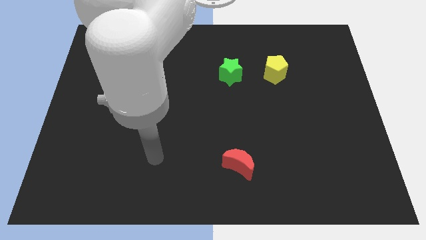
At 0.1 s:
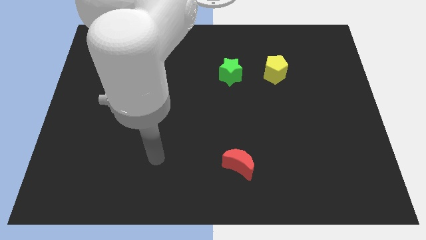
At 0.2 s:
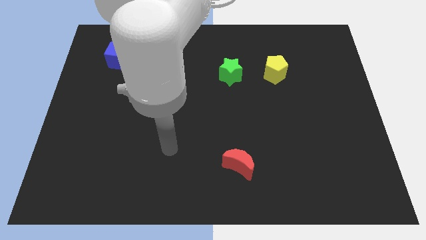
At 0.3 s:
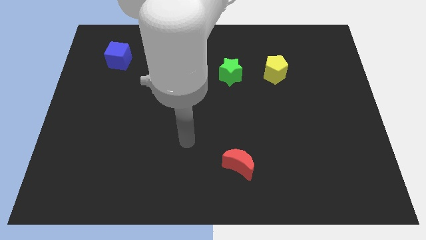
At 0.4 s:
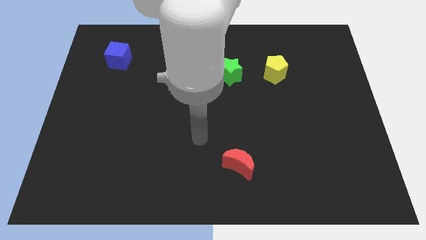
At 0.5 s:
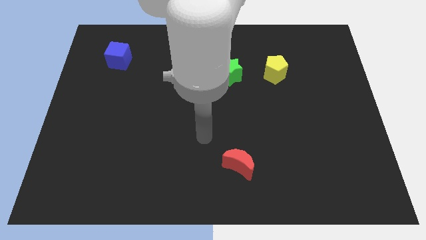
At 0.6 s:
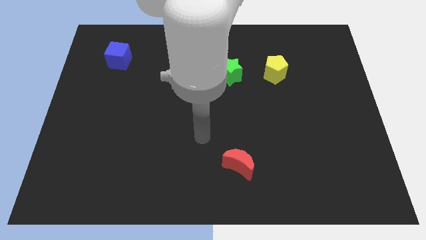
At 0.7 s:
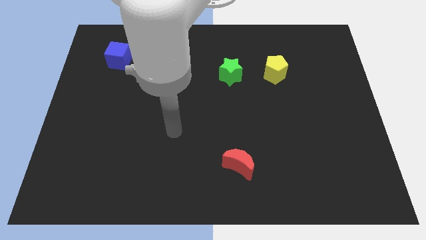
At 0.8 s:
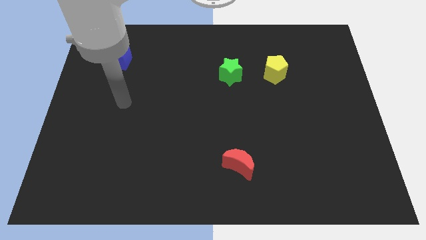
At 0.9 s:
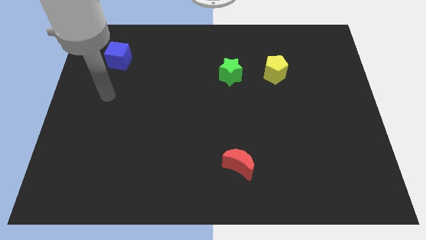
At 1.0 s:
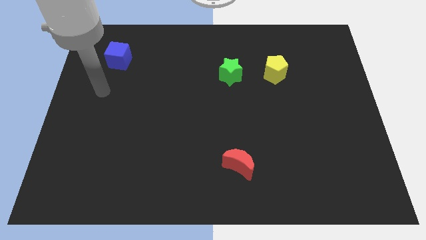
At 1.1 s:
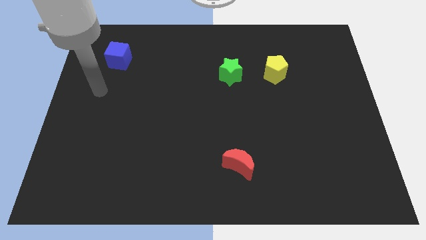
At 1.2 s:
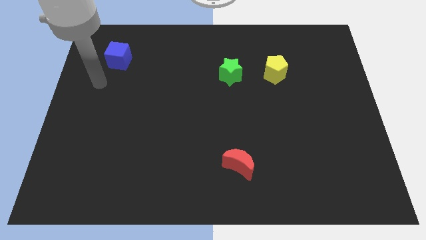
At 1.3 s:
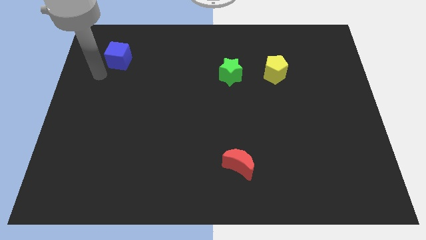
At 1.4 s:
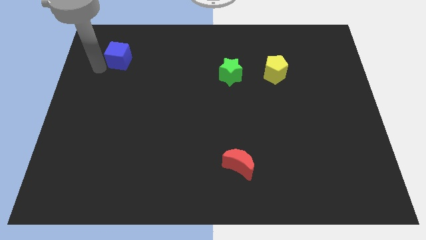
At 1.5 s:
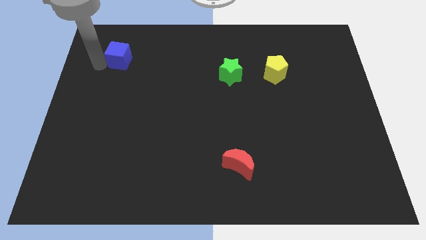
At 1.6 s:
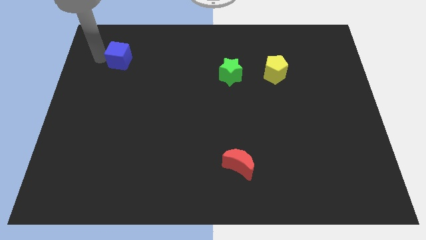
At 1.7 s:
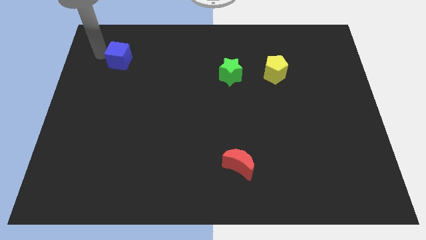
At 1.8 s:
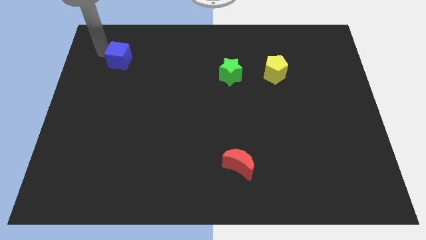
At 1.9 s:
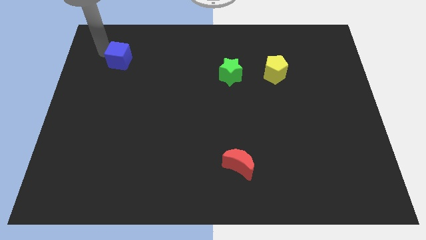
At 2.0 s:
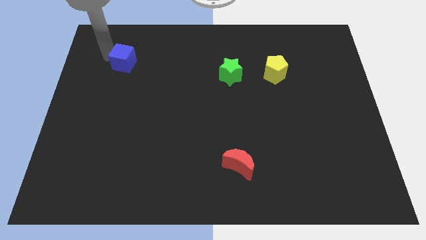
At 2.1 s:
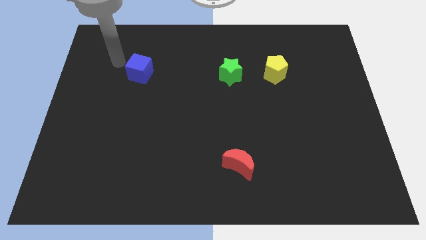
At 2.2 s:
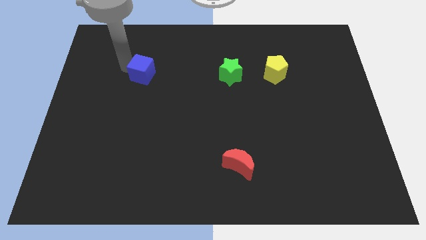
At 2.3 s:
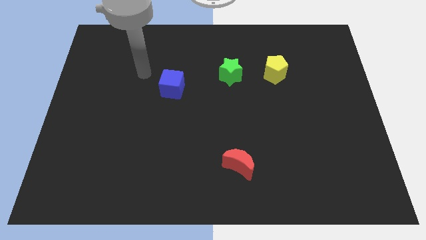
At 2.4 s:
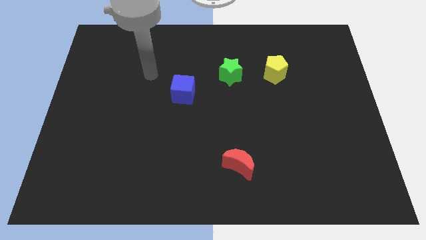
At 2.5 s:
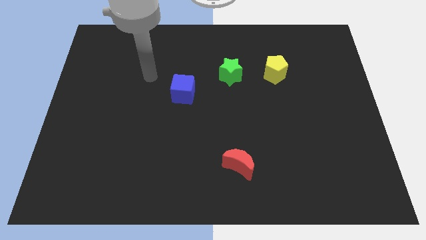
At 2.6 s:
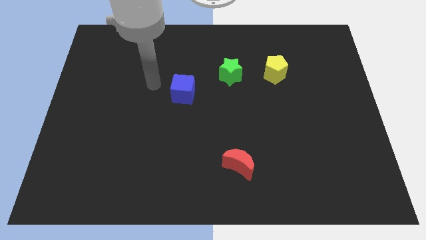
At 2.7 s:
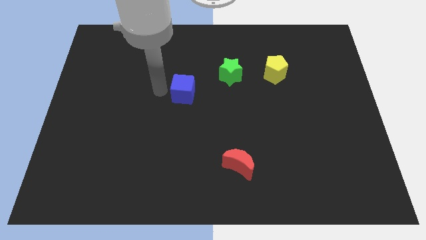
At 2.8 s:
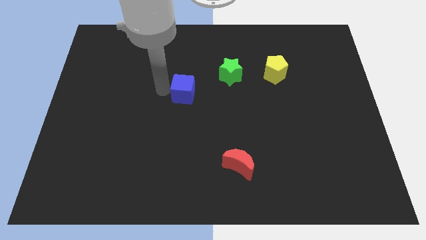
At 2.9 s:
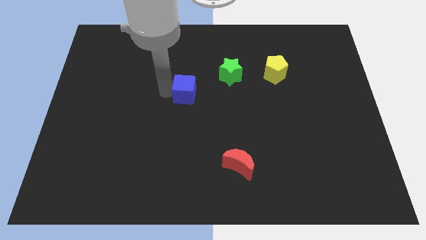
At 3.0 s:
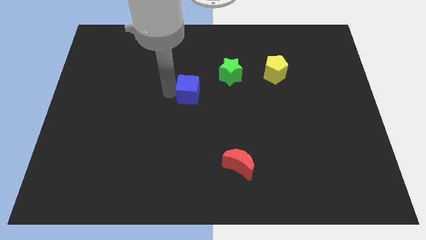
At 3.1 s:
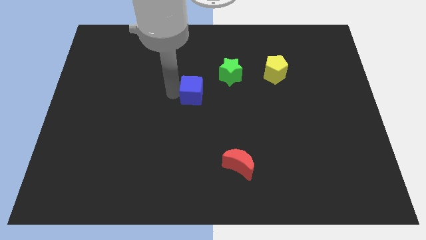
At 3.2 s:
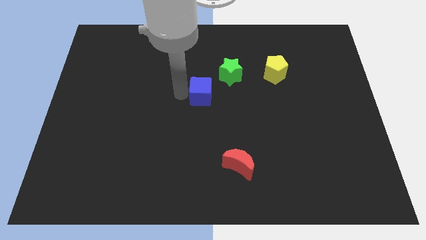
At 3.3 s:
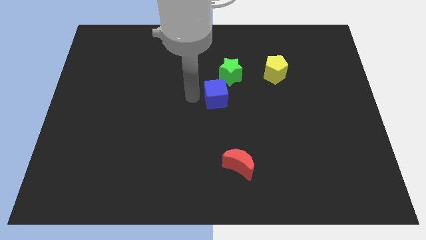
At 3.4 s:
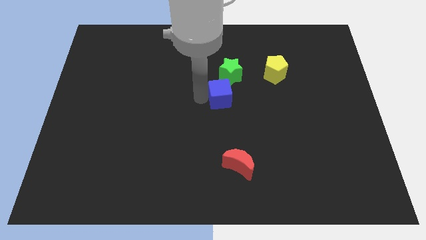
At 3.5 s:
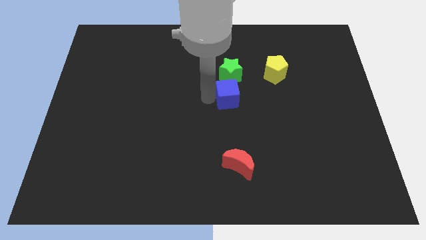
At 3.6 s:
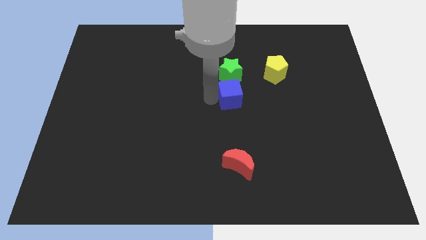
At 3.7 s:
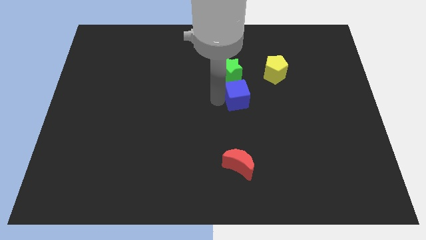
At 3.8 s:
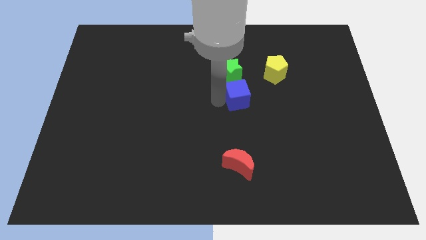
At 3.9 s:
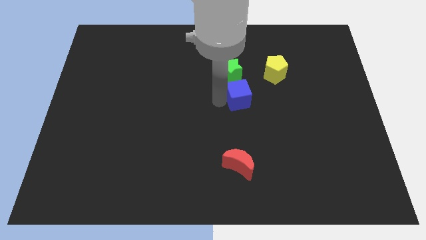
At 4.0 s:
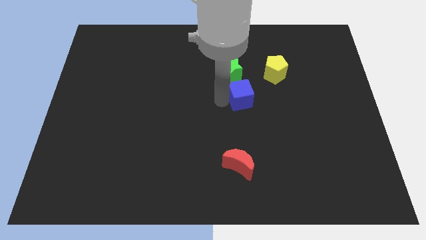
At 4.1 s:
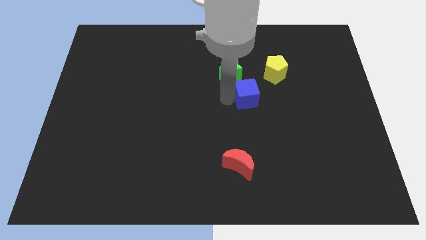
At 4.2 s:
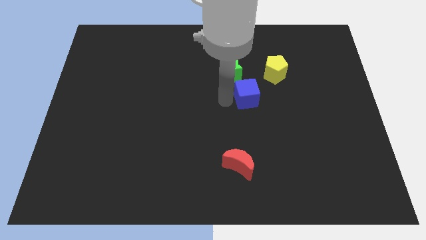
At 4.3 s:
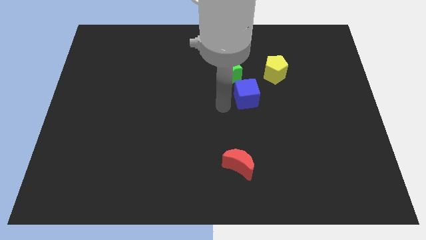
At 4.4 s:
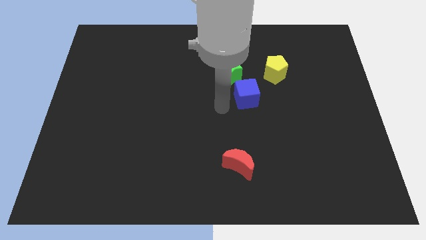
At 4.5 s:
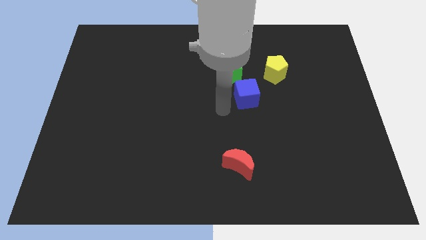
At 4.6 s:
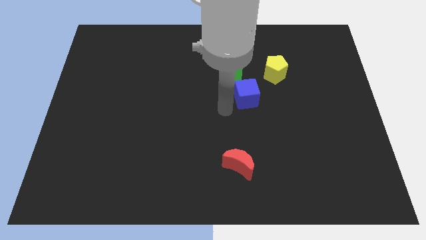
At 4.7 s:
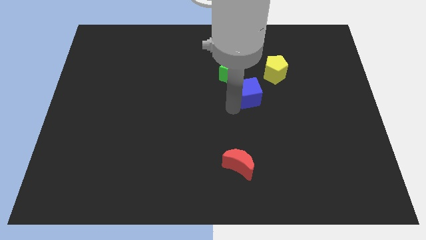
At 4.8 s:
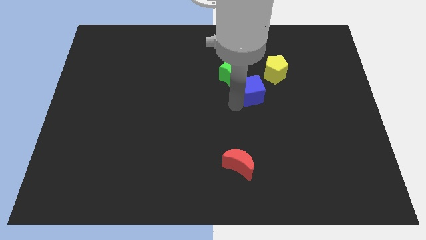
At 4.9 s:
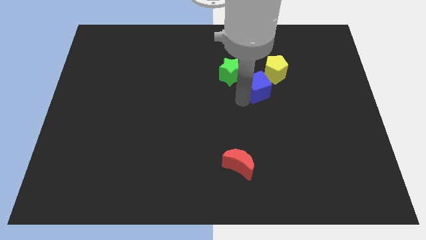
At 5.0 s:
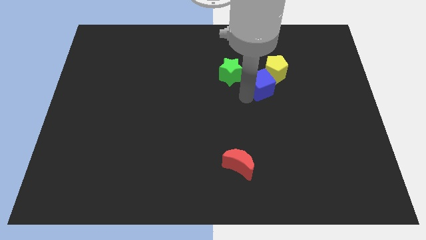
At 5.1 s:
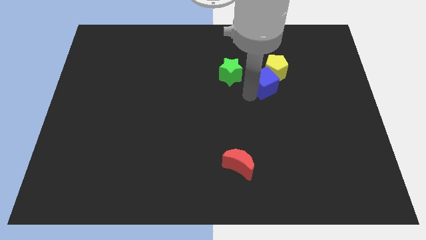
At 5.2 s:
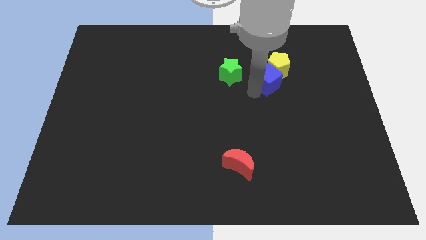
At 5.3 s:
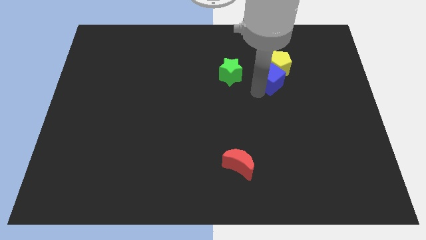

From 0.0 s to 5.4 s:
put the blue block close to the yellow block

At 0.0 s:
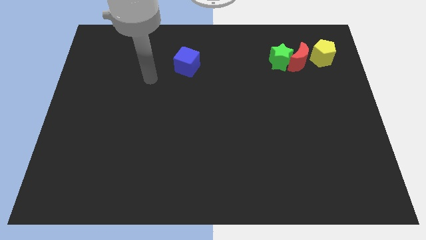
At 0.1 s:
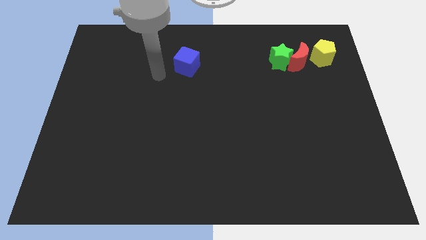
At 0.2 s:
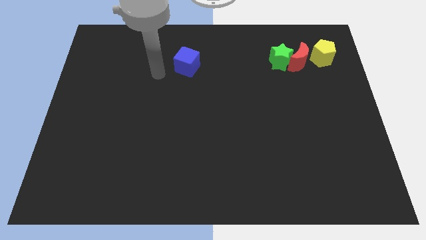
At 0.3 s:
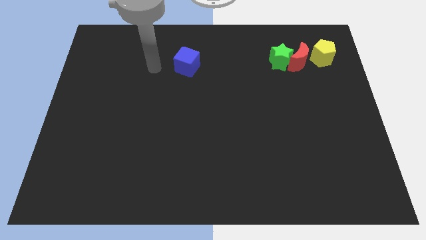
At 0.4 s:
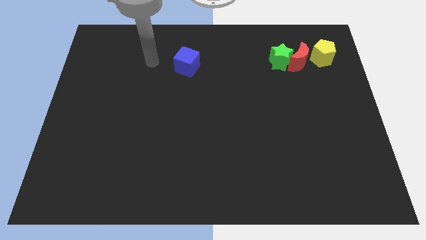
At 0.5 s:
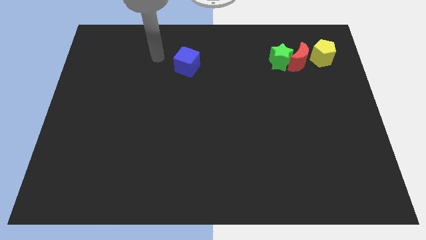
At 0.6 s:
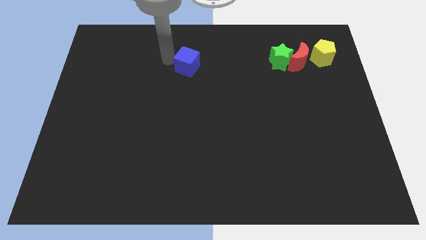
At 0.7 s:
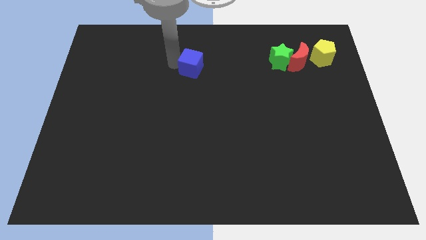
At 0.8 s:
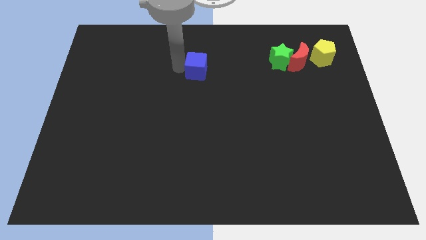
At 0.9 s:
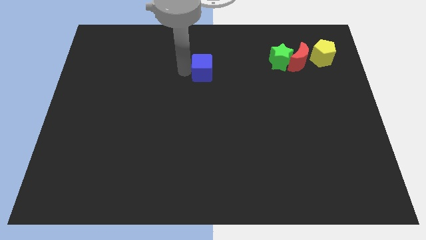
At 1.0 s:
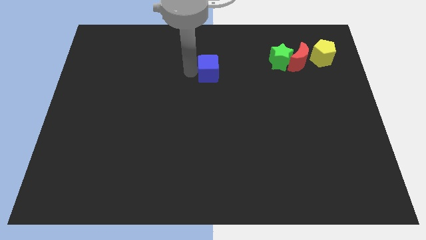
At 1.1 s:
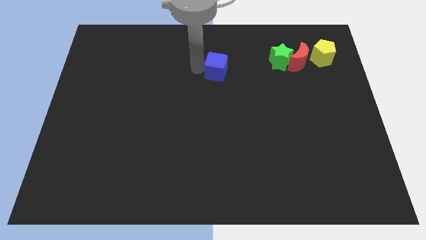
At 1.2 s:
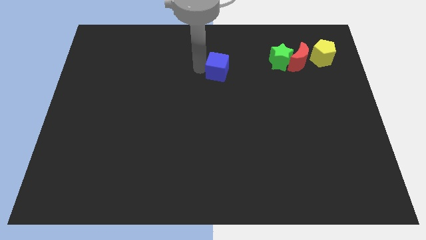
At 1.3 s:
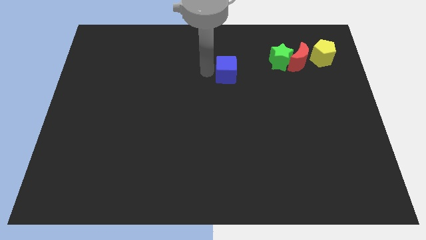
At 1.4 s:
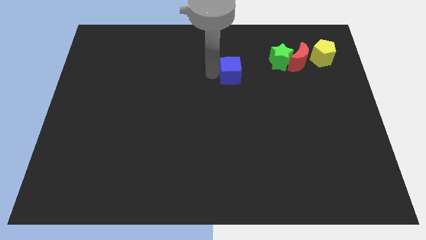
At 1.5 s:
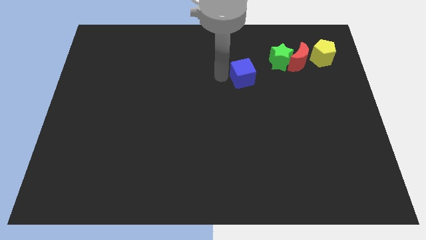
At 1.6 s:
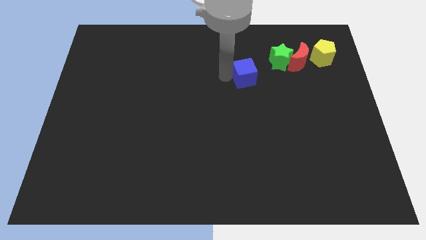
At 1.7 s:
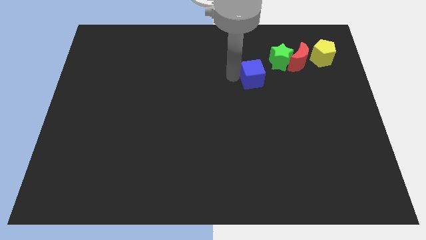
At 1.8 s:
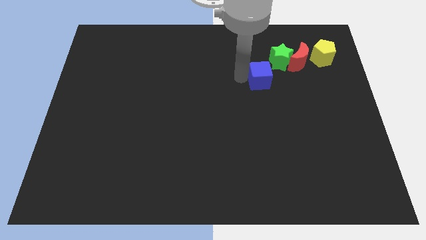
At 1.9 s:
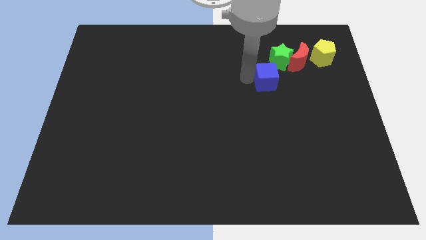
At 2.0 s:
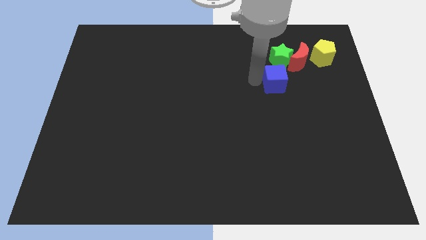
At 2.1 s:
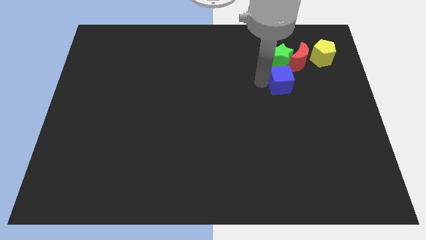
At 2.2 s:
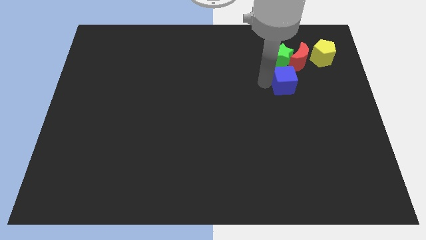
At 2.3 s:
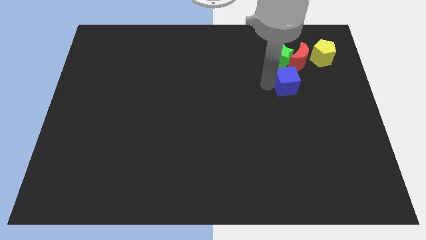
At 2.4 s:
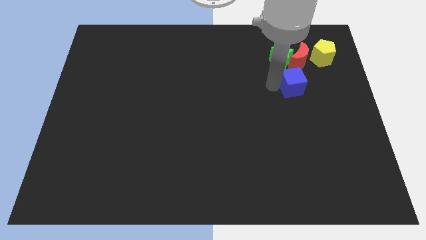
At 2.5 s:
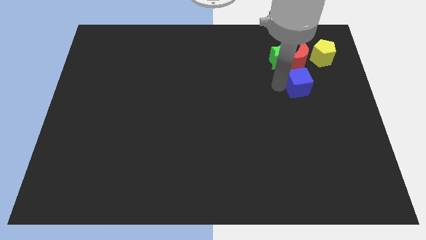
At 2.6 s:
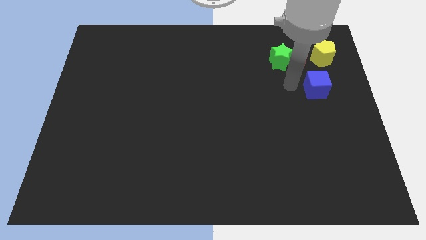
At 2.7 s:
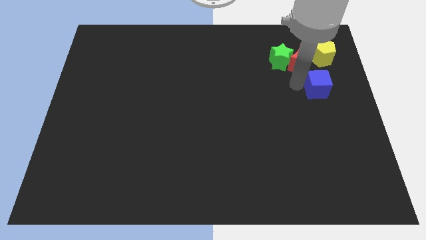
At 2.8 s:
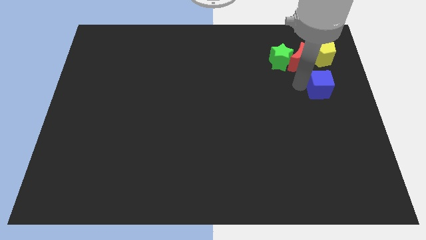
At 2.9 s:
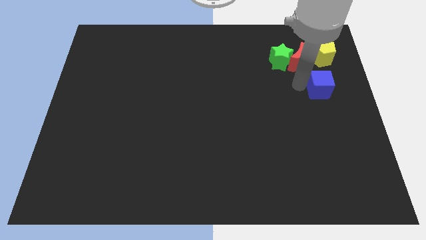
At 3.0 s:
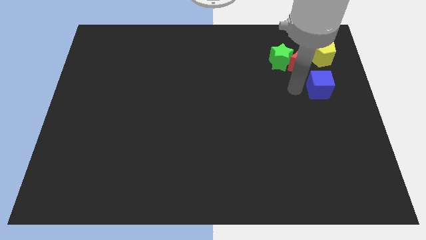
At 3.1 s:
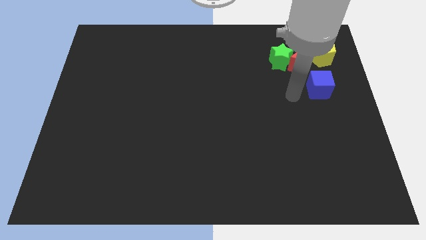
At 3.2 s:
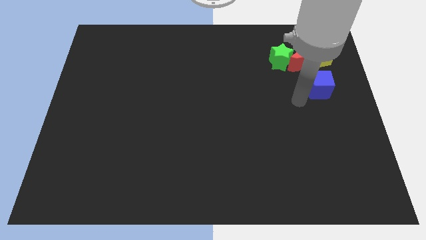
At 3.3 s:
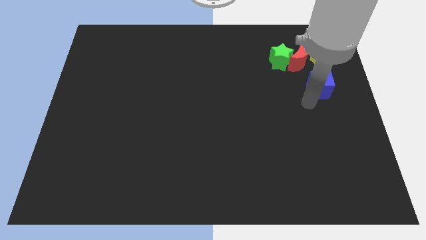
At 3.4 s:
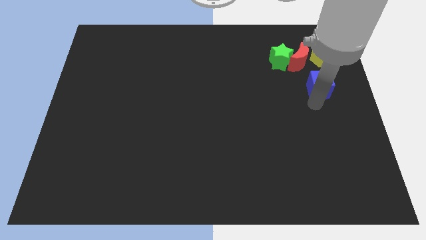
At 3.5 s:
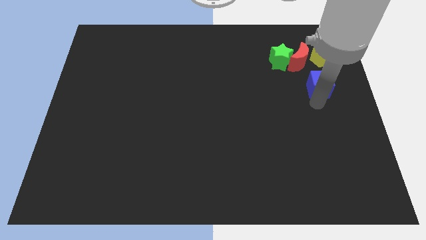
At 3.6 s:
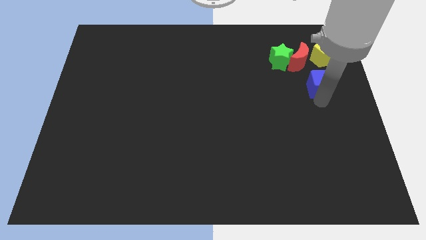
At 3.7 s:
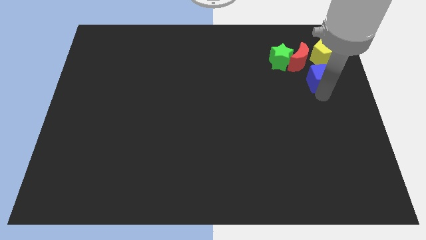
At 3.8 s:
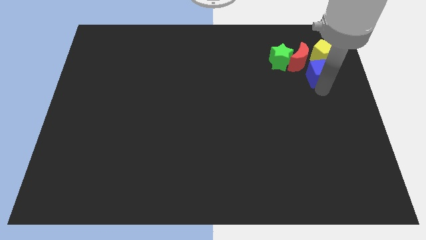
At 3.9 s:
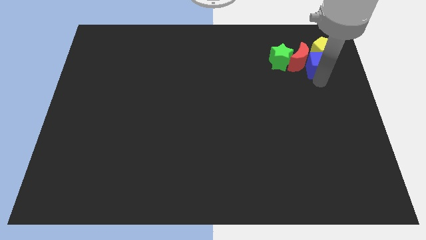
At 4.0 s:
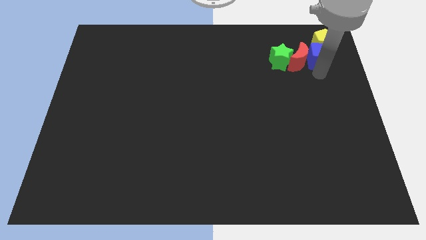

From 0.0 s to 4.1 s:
slide the cube close to the pentagon
